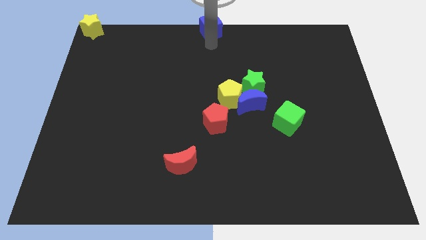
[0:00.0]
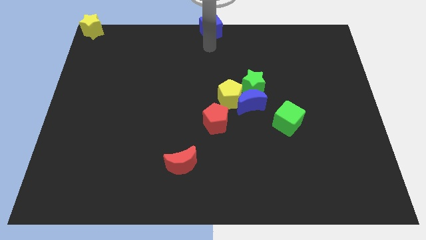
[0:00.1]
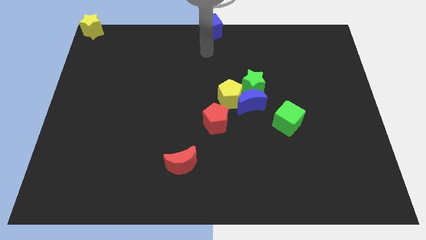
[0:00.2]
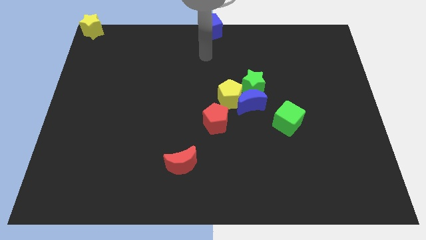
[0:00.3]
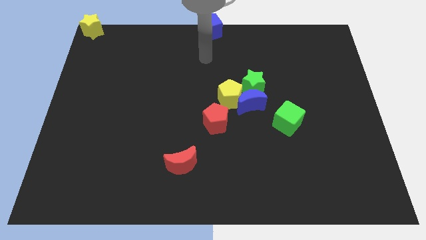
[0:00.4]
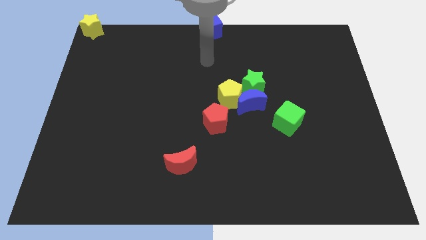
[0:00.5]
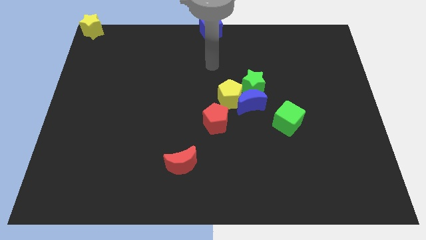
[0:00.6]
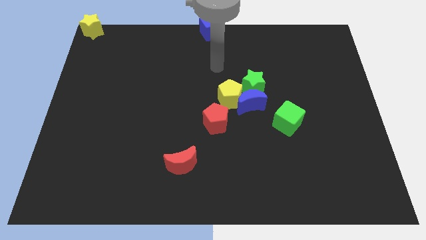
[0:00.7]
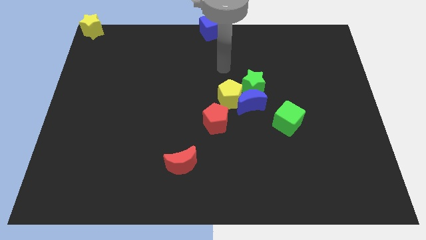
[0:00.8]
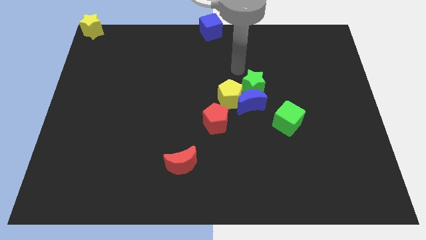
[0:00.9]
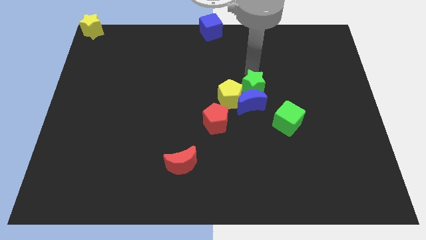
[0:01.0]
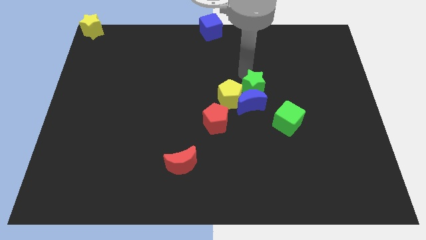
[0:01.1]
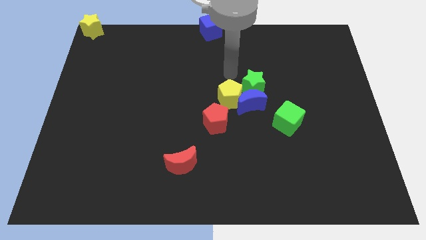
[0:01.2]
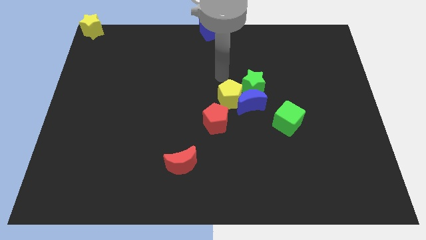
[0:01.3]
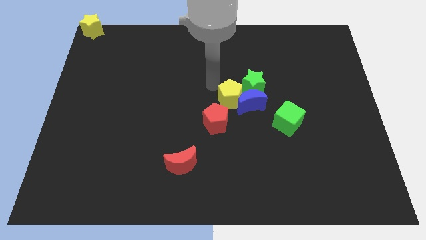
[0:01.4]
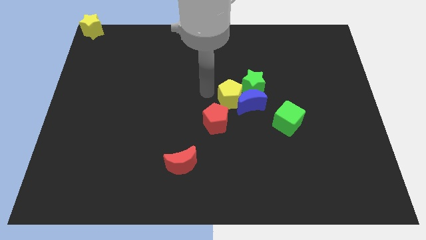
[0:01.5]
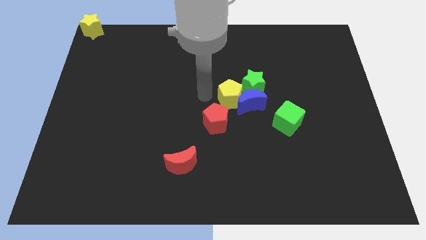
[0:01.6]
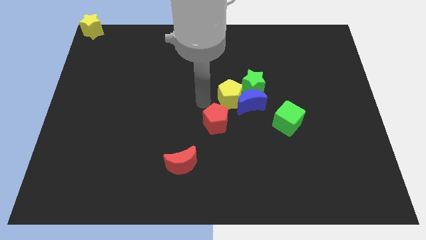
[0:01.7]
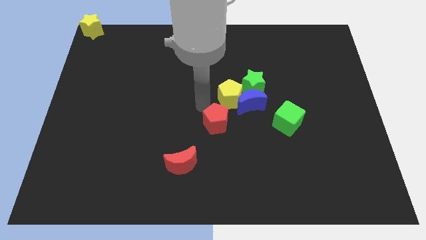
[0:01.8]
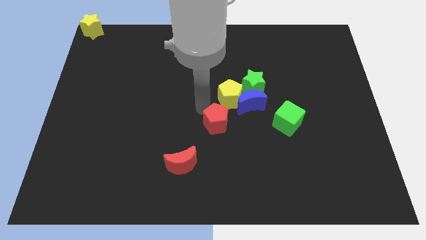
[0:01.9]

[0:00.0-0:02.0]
move your arm towards the red pentagon

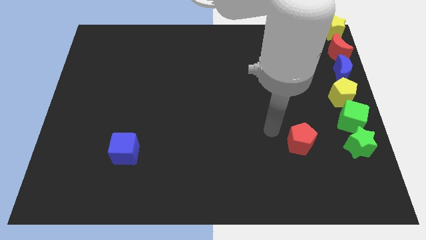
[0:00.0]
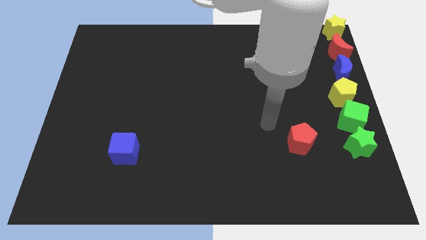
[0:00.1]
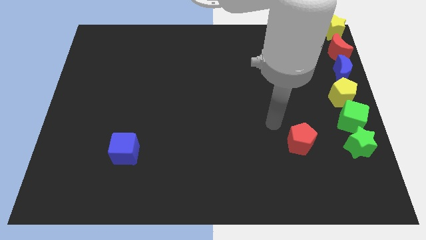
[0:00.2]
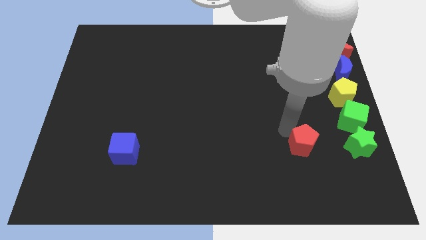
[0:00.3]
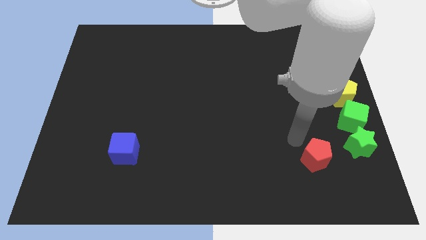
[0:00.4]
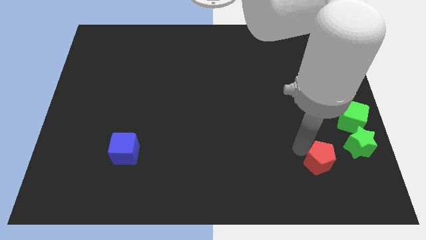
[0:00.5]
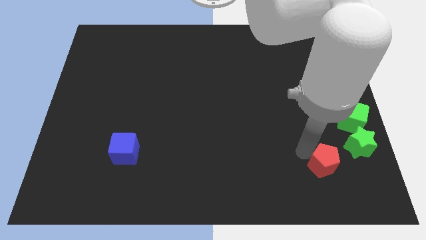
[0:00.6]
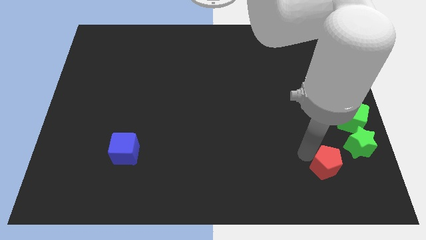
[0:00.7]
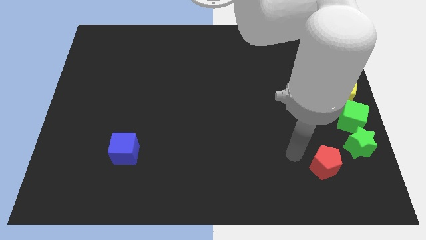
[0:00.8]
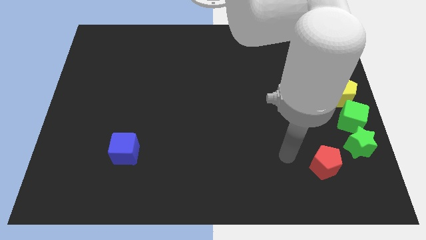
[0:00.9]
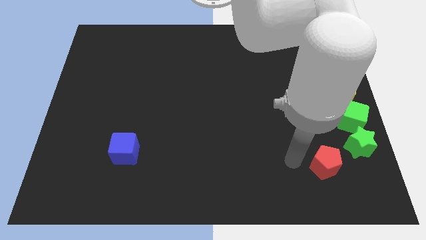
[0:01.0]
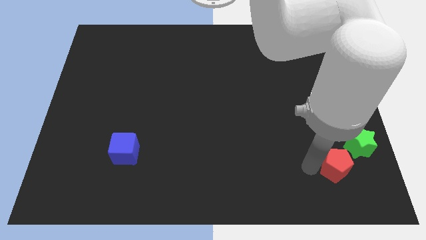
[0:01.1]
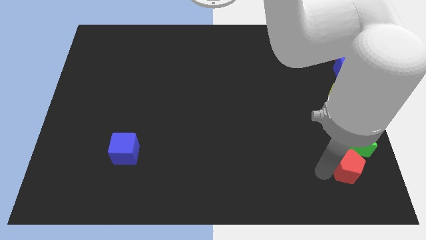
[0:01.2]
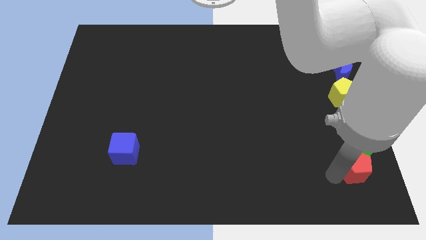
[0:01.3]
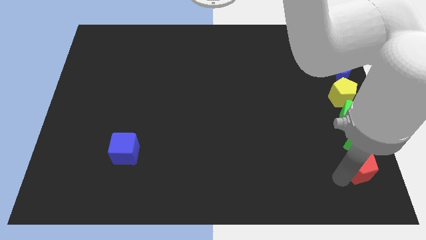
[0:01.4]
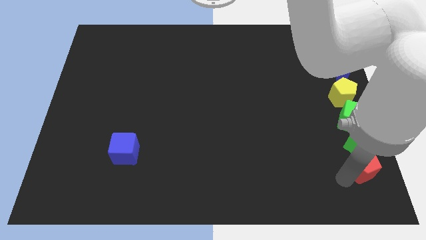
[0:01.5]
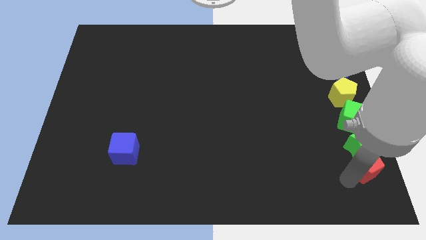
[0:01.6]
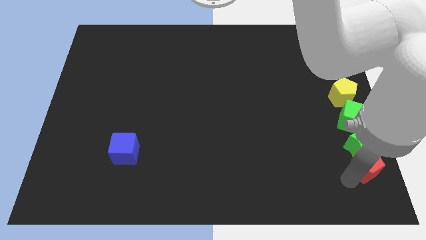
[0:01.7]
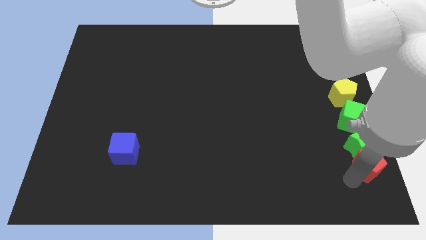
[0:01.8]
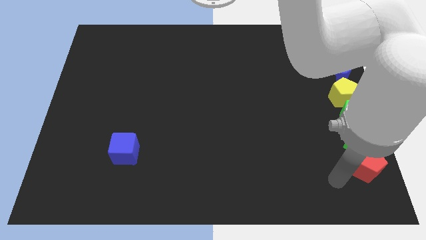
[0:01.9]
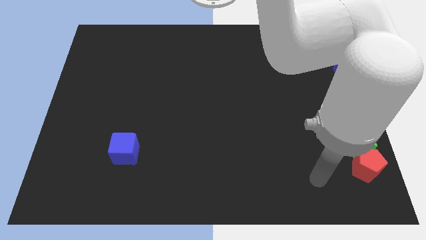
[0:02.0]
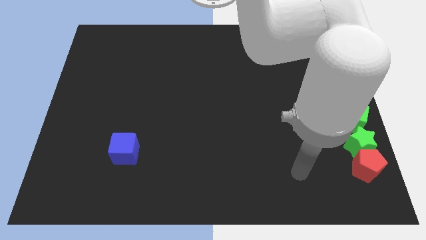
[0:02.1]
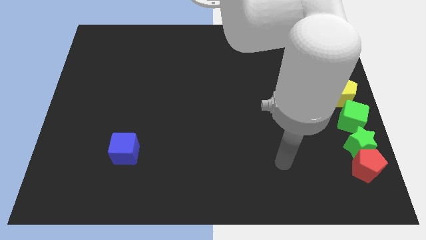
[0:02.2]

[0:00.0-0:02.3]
put the red pentagon underneath the green star

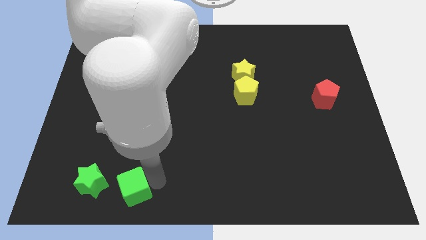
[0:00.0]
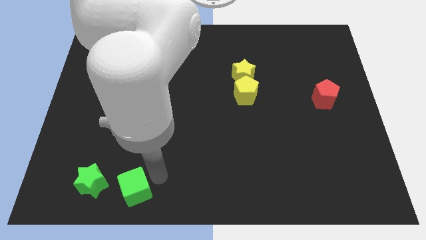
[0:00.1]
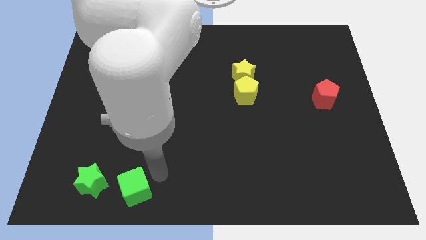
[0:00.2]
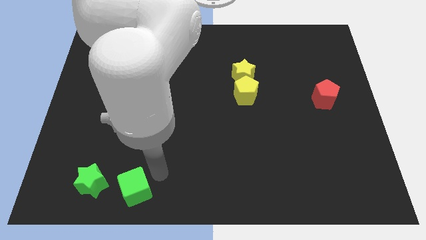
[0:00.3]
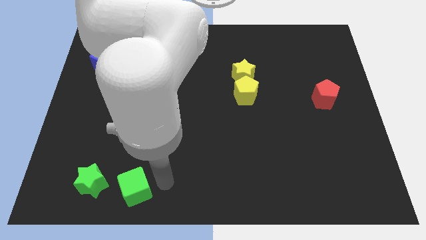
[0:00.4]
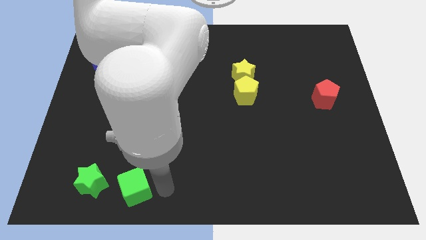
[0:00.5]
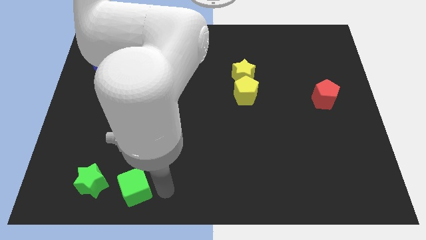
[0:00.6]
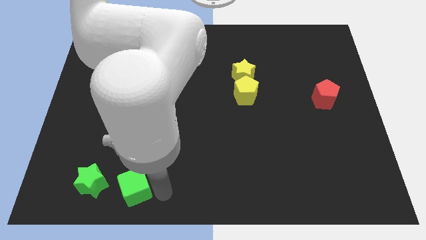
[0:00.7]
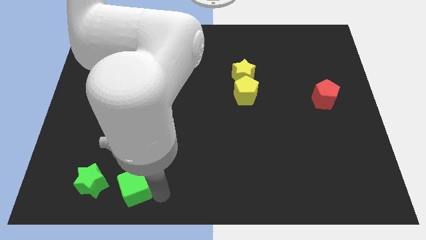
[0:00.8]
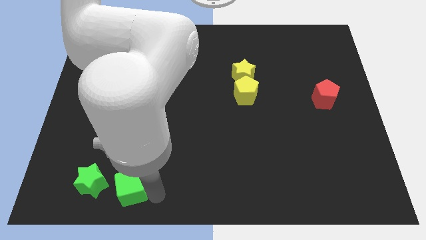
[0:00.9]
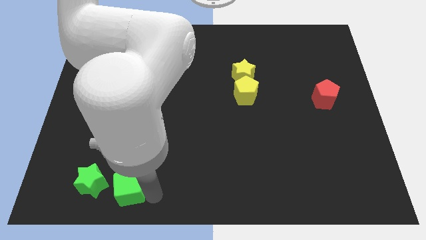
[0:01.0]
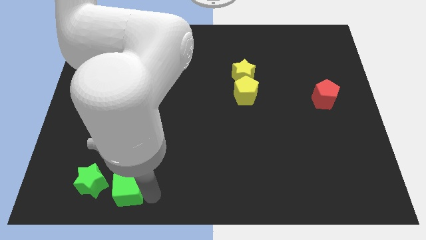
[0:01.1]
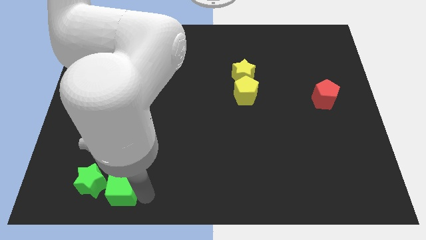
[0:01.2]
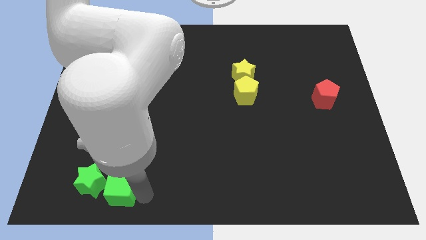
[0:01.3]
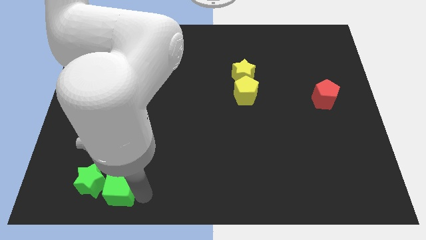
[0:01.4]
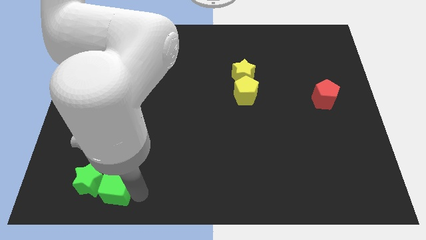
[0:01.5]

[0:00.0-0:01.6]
push the green cube slightly to the left

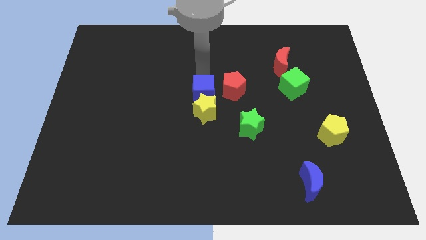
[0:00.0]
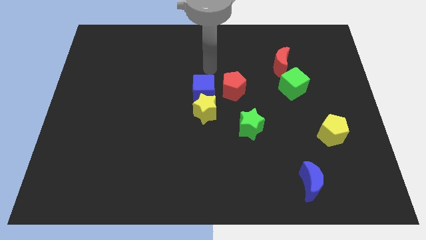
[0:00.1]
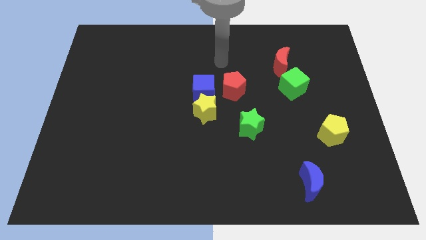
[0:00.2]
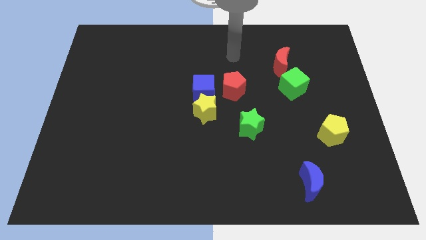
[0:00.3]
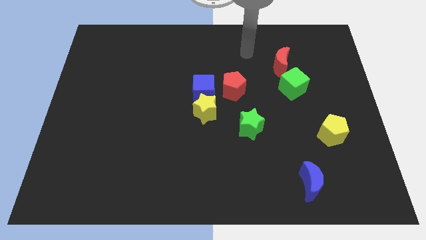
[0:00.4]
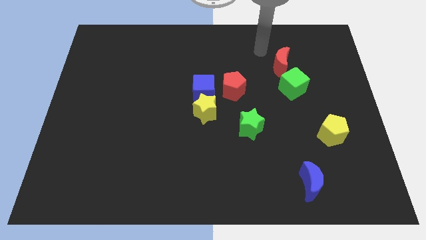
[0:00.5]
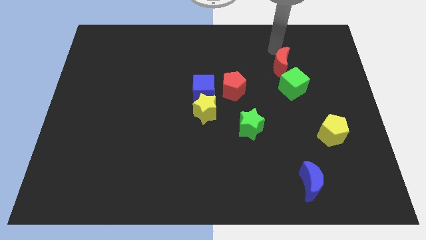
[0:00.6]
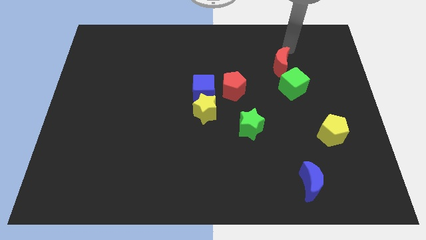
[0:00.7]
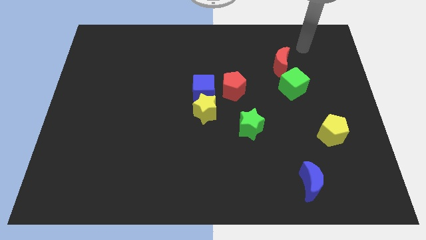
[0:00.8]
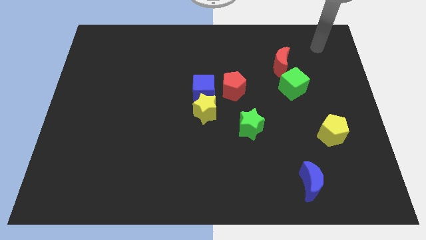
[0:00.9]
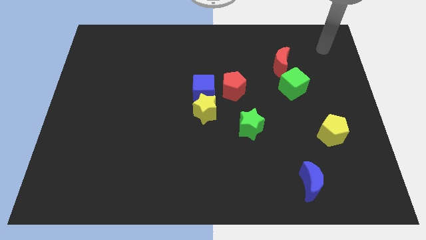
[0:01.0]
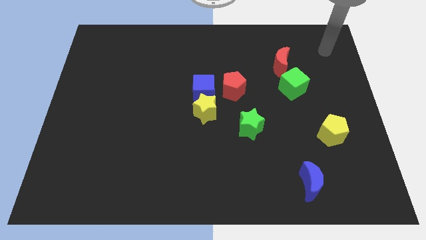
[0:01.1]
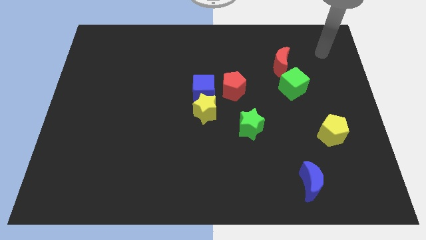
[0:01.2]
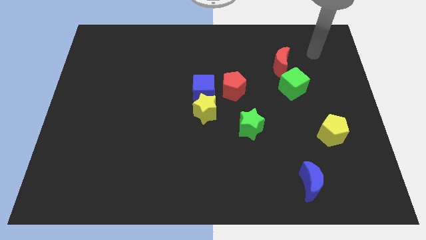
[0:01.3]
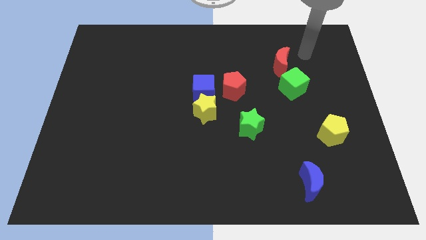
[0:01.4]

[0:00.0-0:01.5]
point your arm at the right of the red crescent

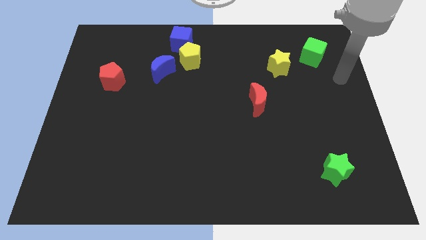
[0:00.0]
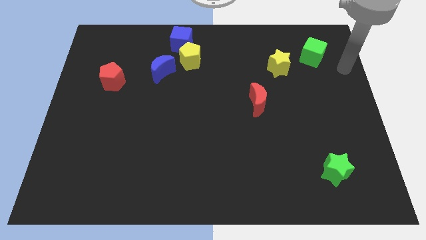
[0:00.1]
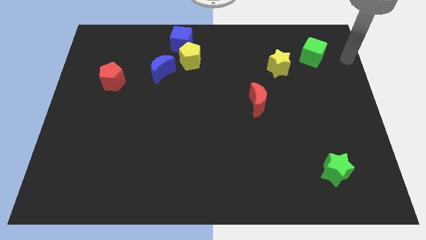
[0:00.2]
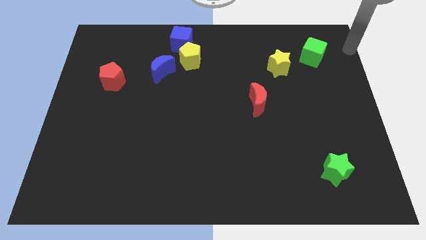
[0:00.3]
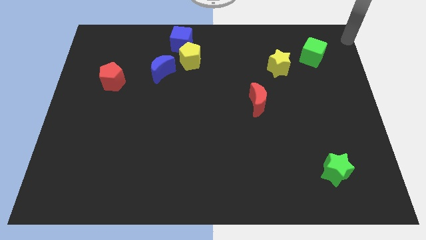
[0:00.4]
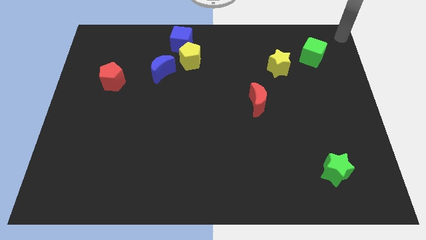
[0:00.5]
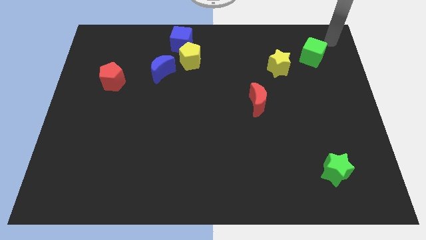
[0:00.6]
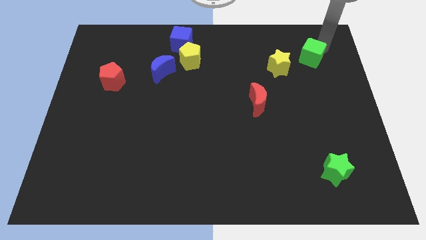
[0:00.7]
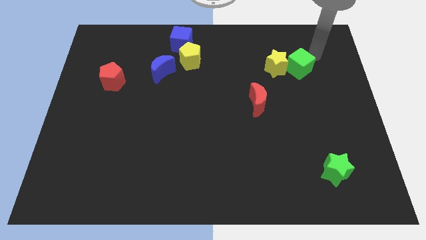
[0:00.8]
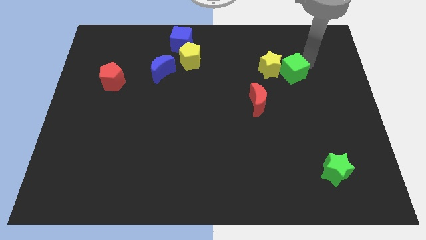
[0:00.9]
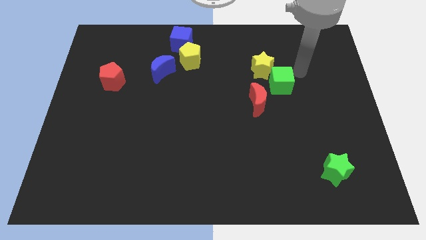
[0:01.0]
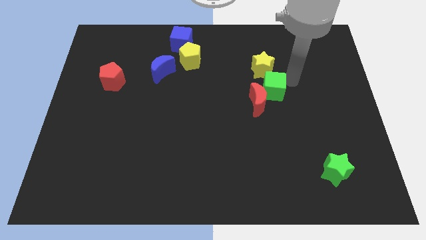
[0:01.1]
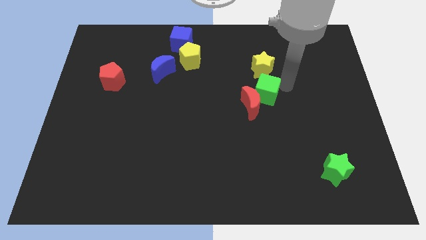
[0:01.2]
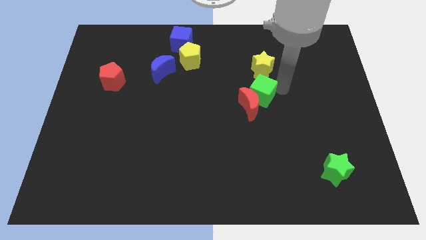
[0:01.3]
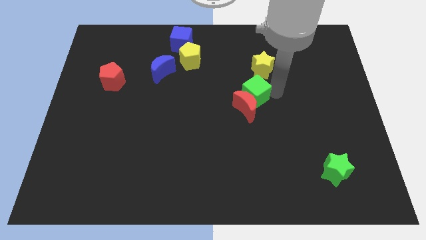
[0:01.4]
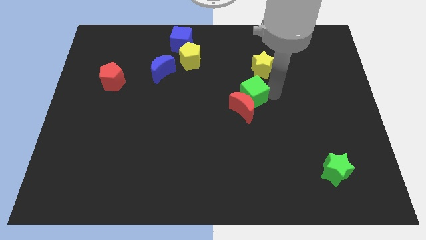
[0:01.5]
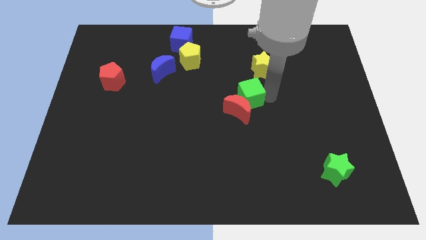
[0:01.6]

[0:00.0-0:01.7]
place green cube between yellow star and red crescent
